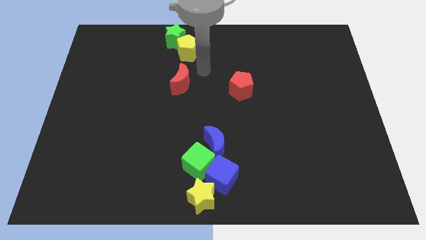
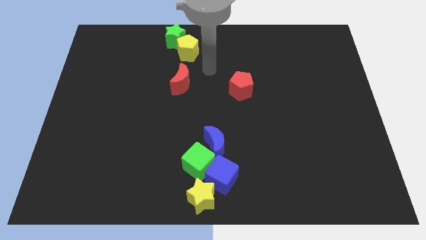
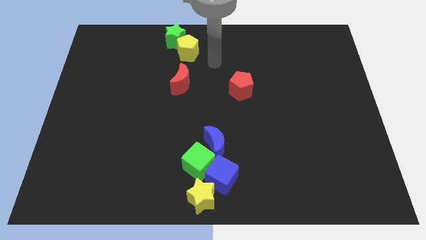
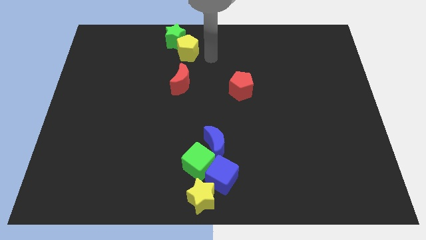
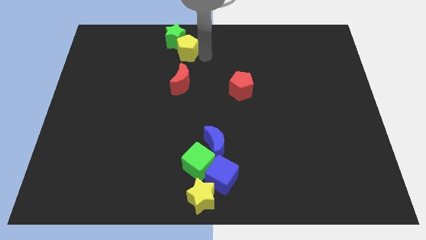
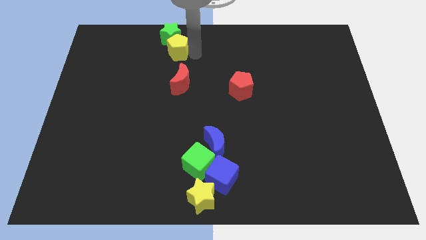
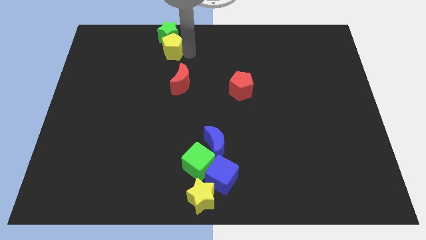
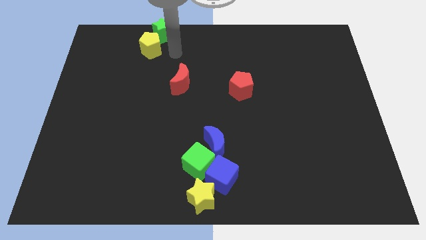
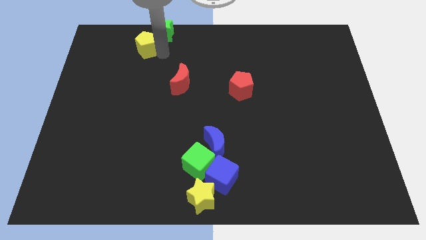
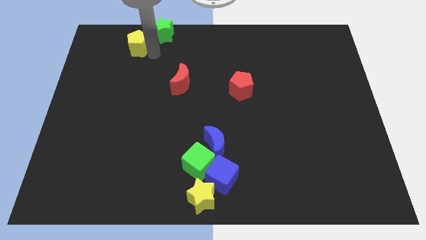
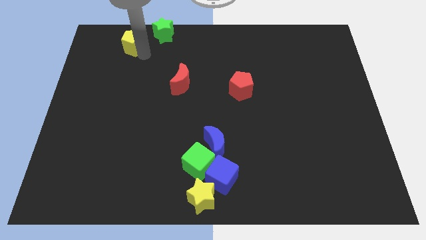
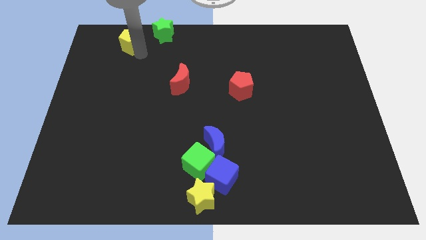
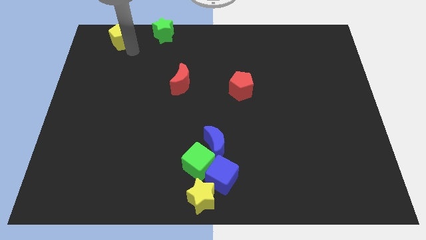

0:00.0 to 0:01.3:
separate the yellow pentagon from the green star

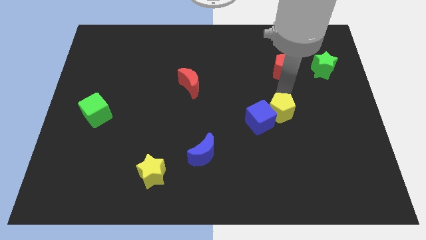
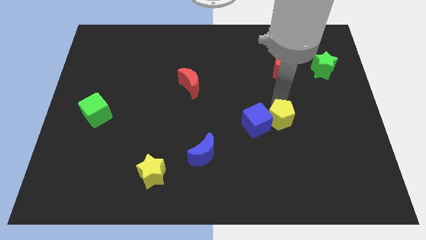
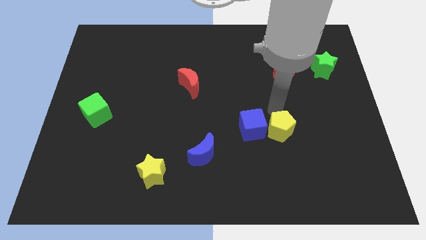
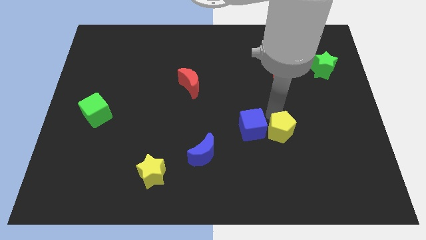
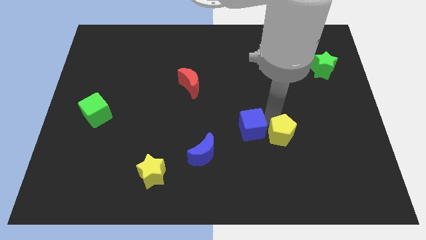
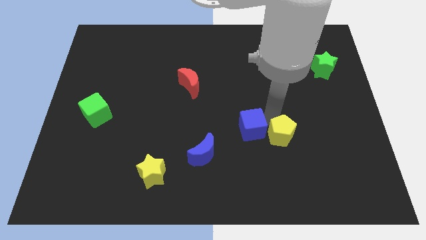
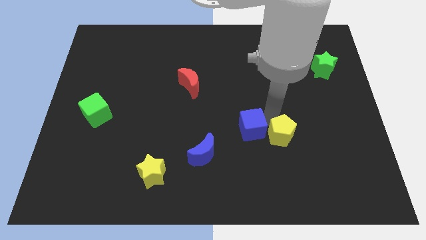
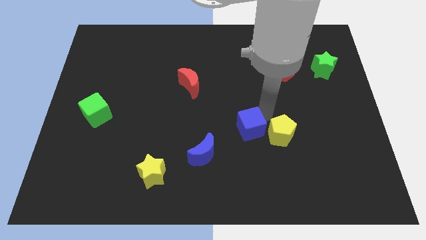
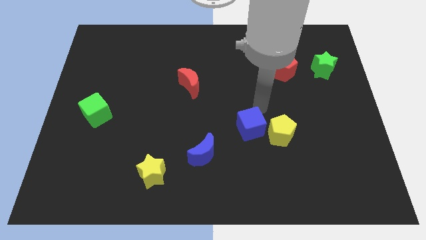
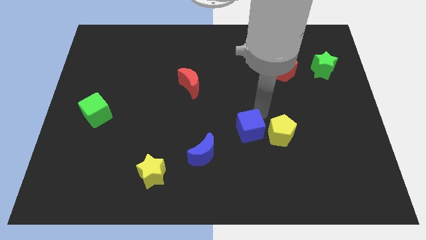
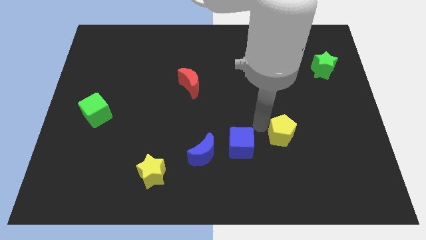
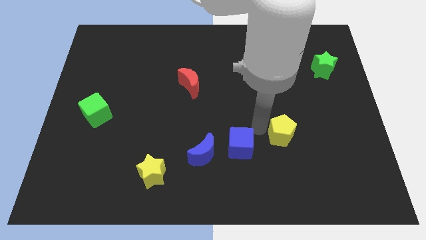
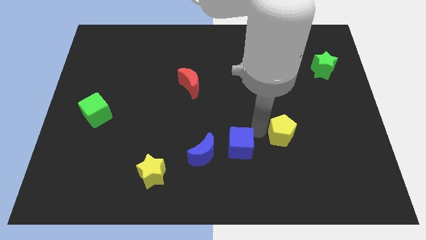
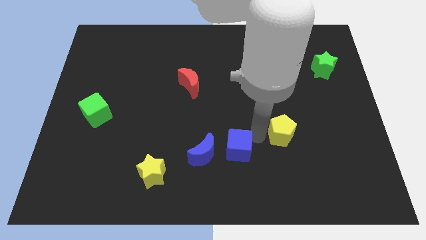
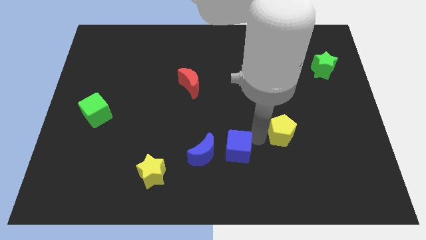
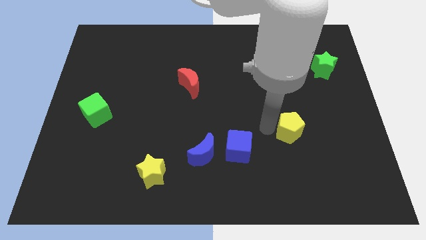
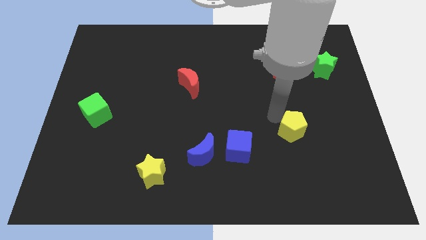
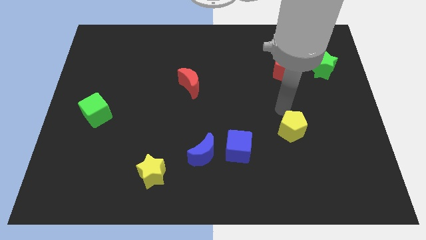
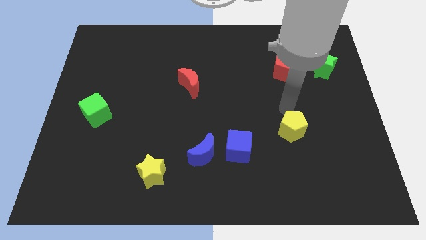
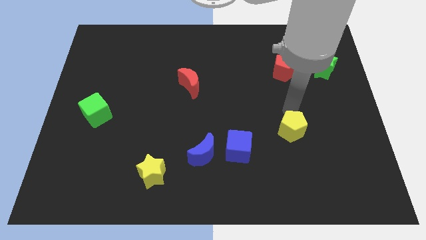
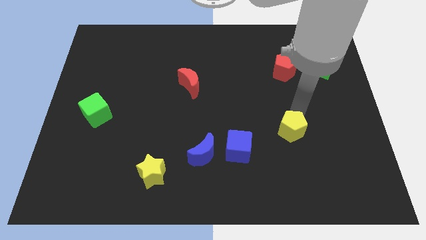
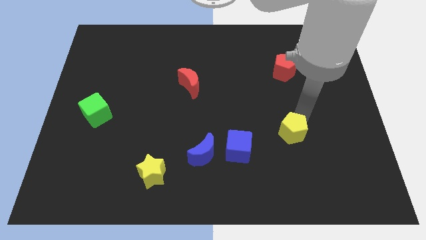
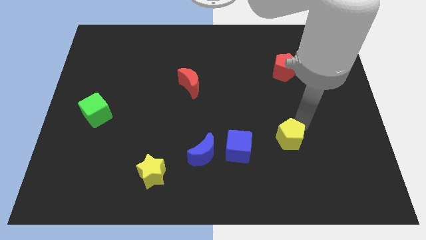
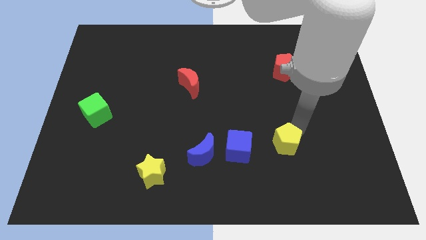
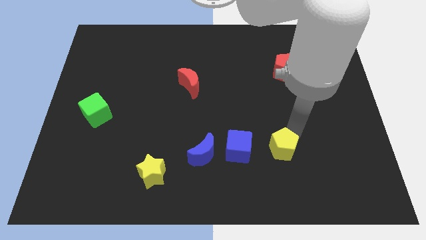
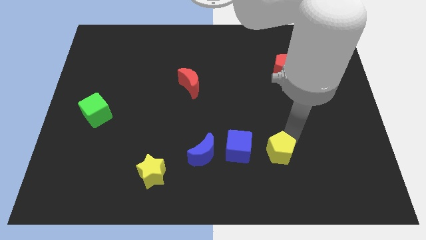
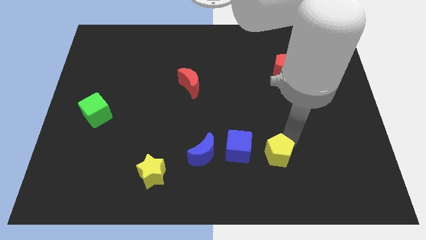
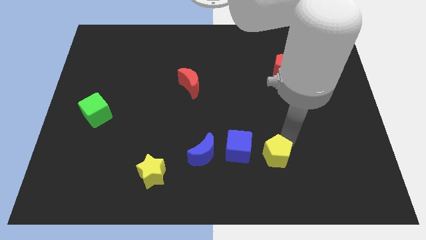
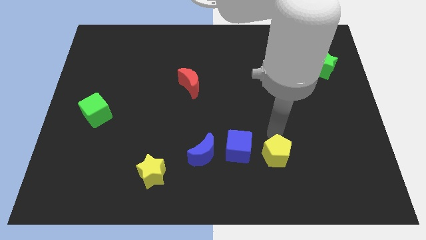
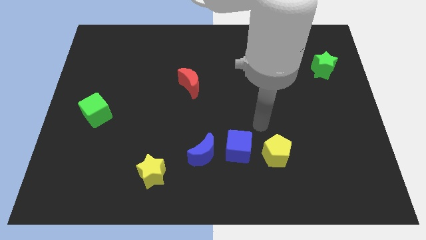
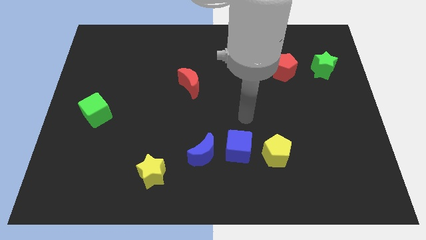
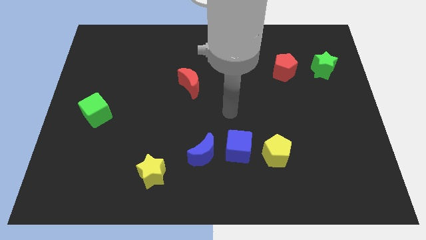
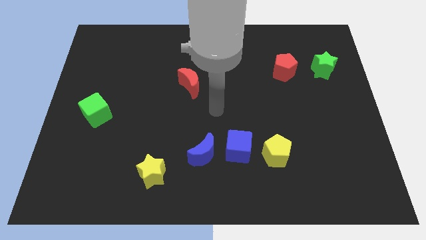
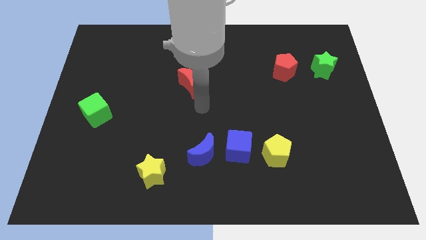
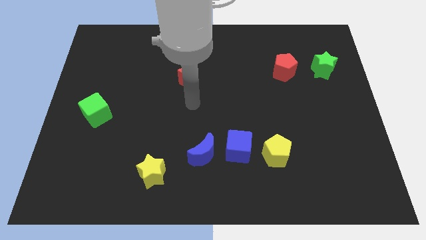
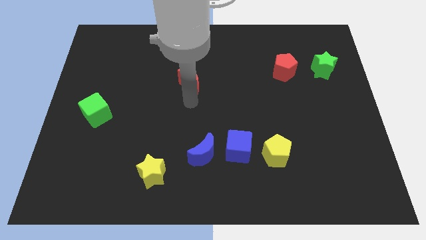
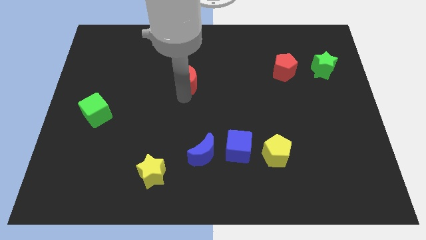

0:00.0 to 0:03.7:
place the blue cube and the yellow pentagon to the right of the blue moon

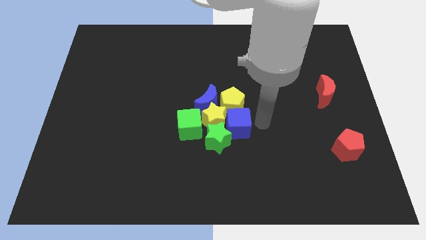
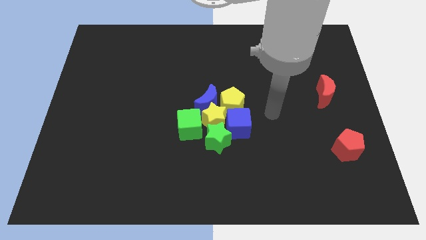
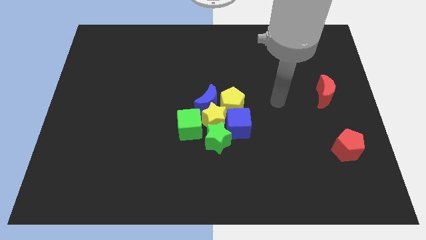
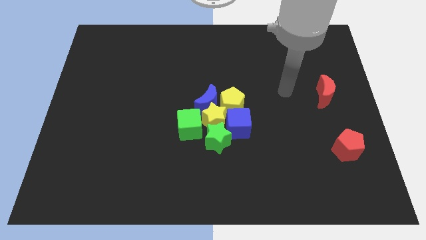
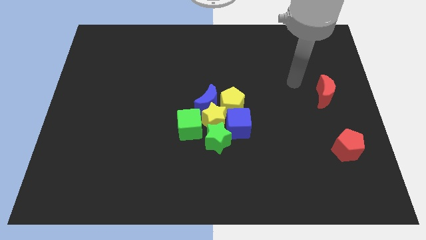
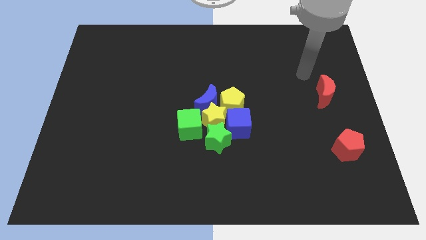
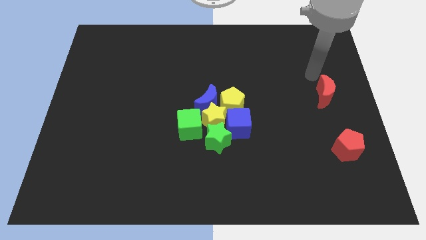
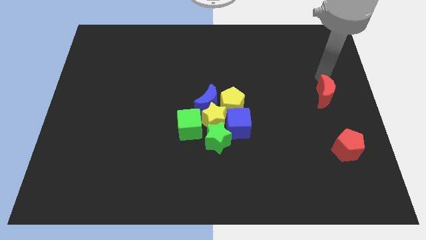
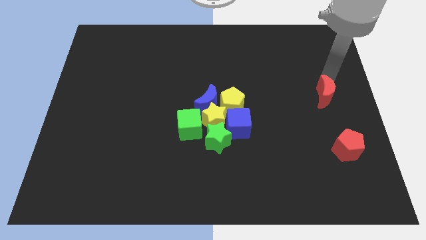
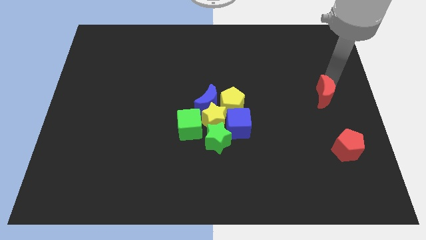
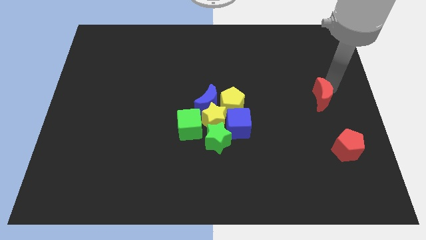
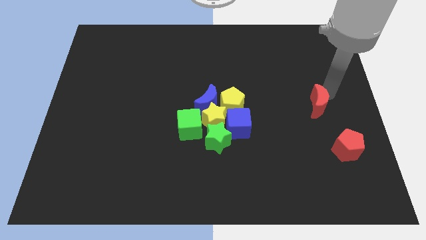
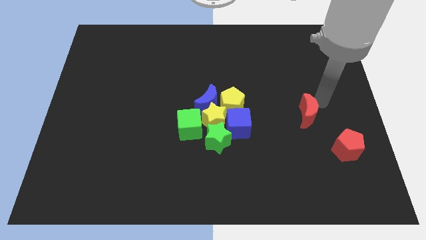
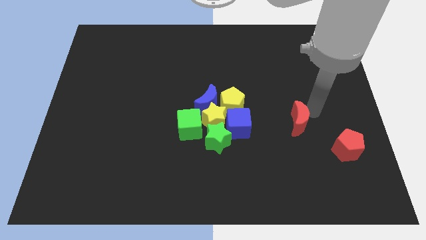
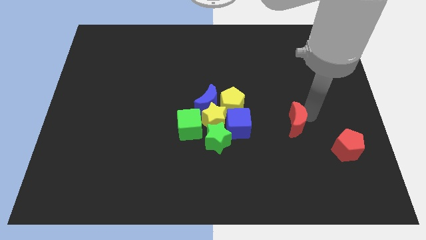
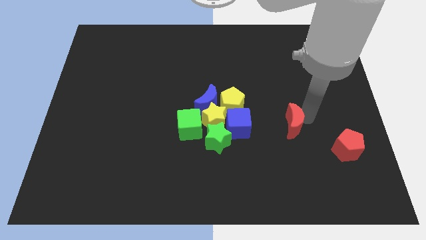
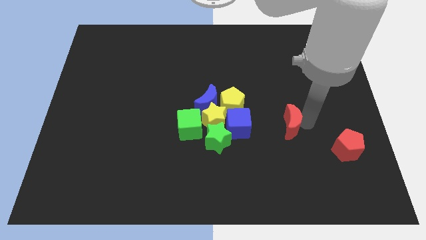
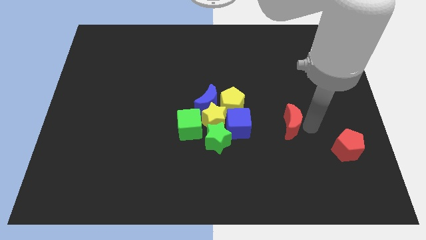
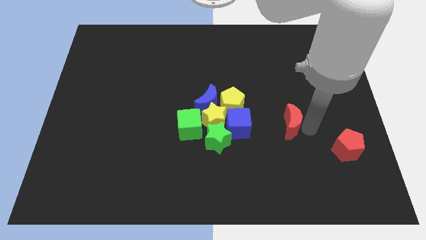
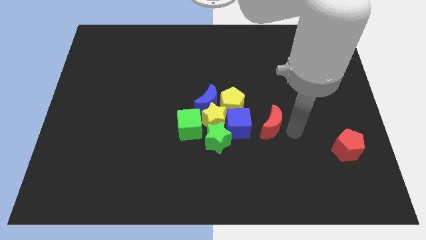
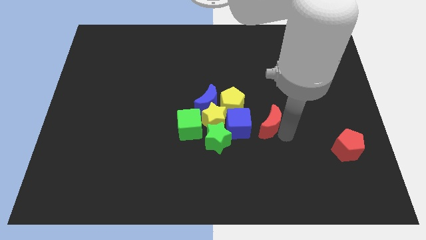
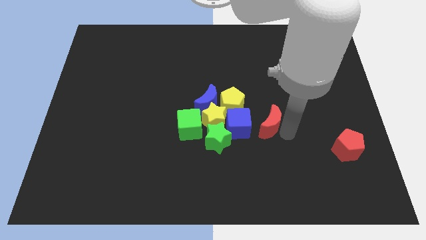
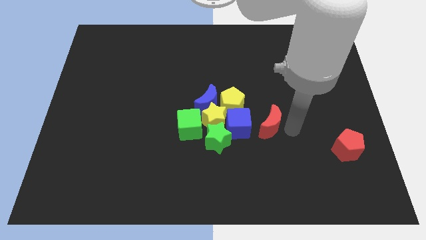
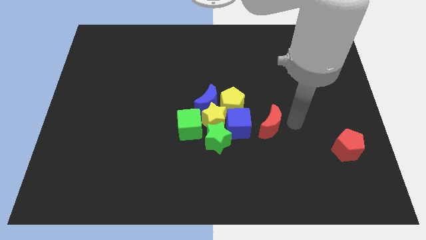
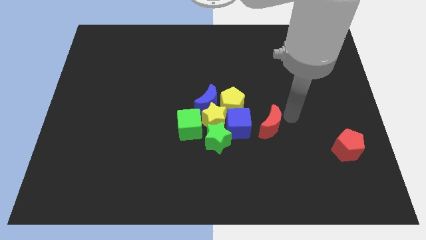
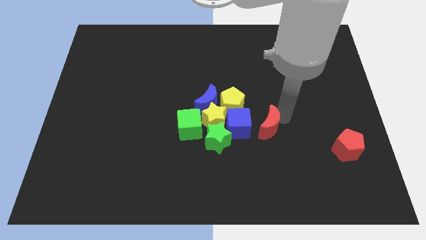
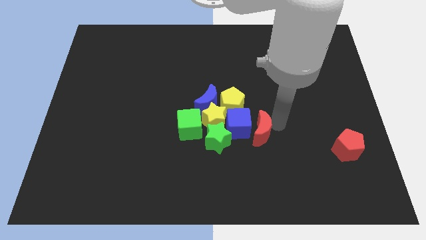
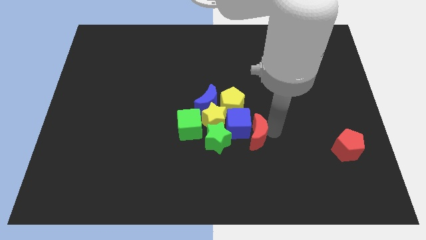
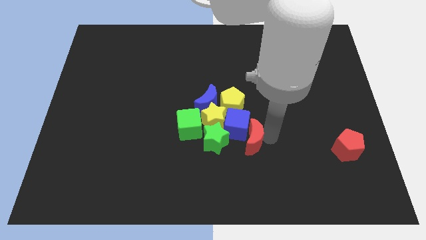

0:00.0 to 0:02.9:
push the red crescent to the right of the blue cube

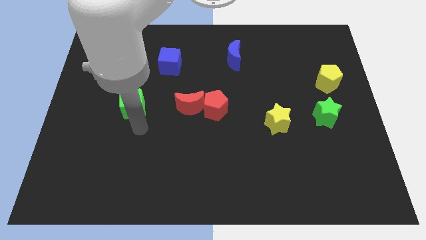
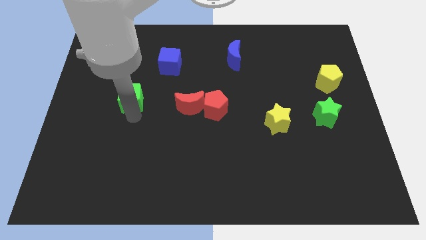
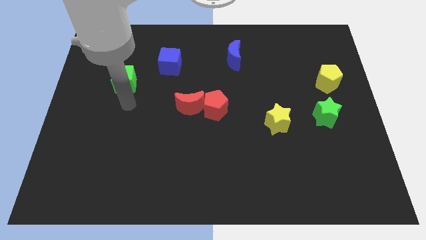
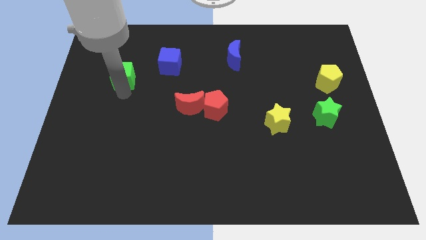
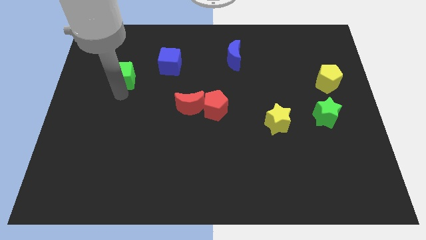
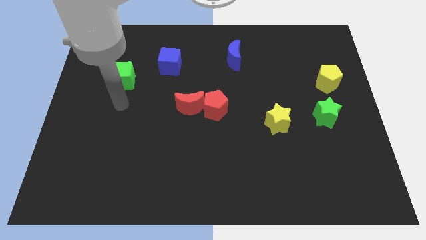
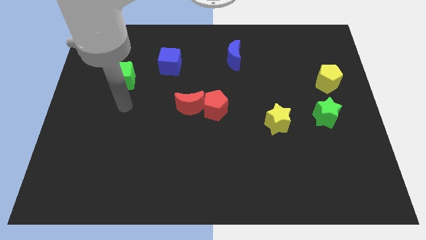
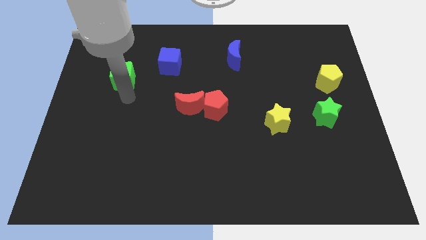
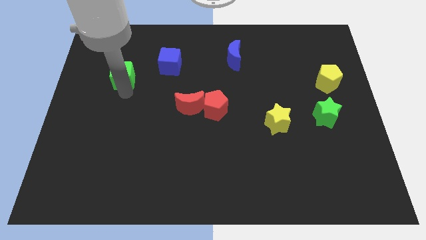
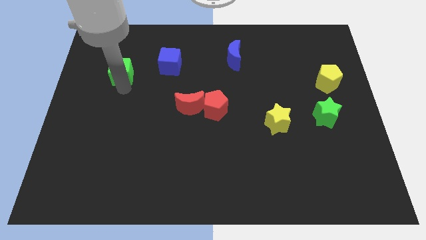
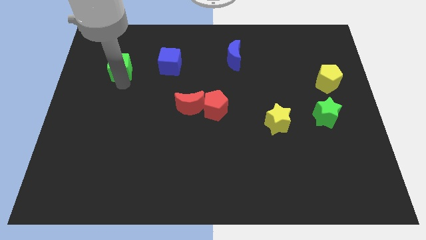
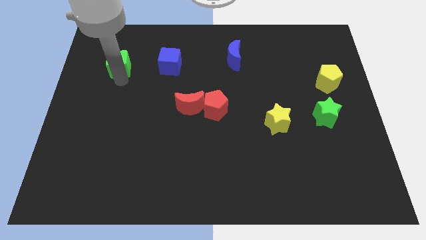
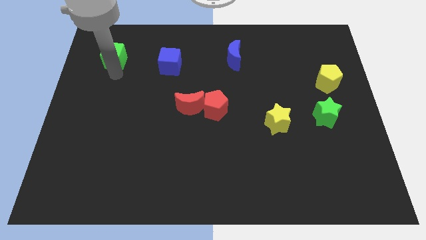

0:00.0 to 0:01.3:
place the green cube to the left side of blue cube
